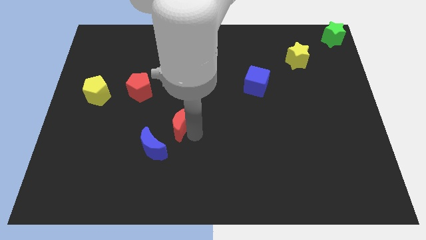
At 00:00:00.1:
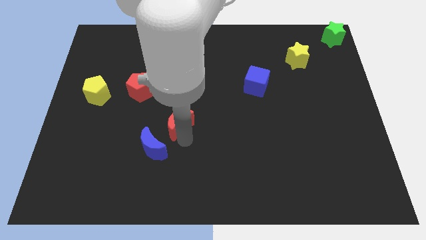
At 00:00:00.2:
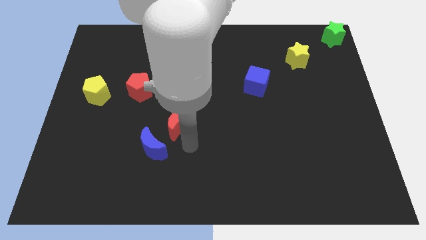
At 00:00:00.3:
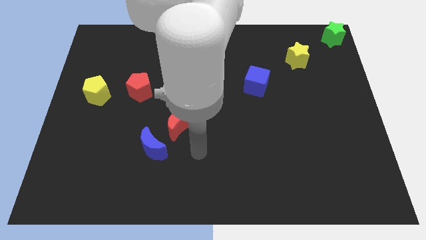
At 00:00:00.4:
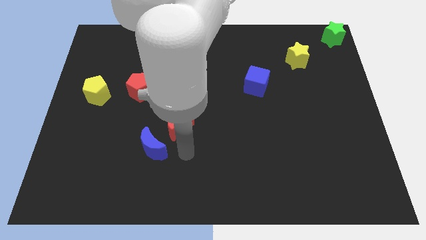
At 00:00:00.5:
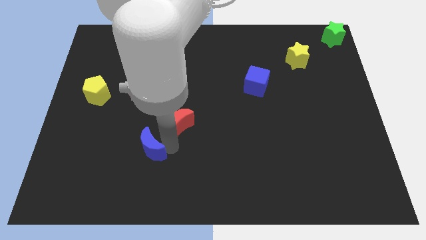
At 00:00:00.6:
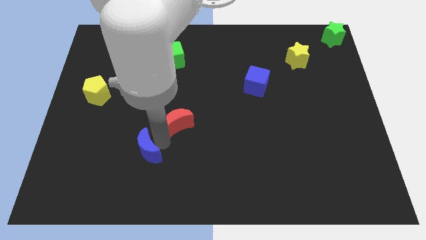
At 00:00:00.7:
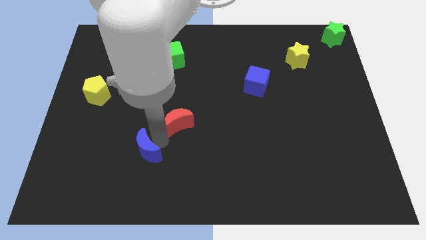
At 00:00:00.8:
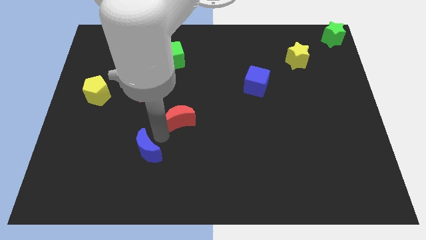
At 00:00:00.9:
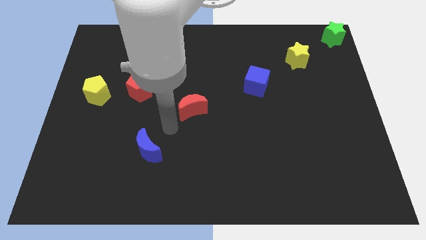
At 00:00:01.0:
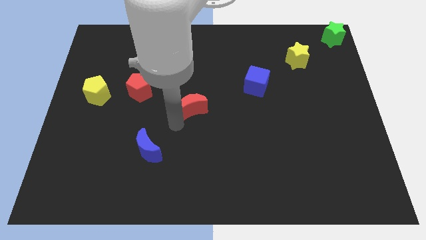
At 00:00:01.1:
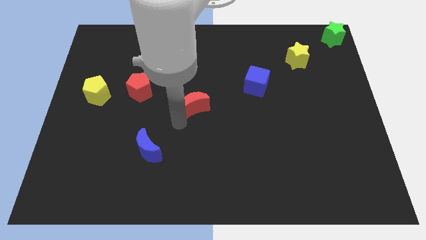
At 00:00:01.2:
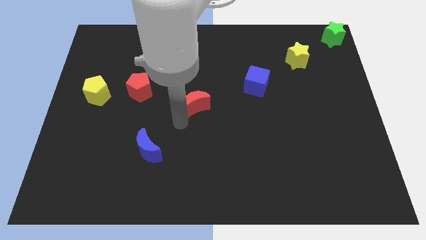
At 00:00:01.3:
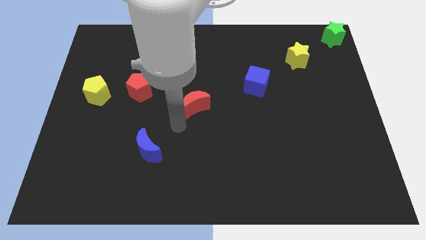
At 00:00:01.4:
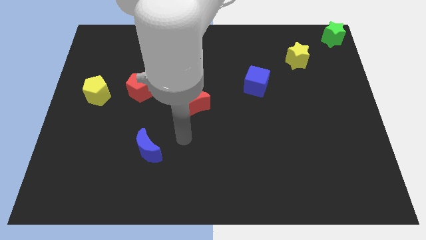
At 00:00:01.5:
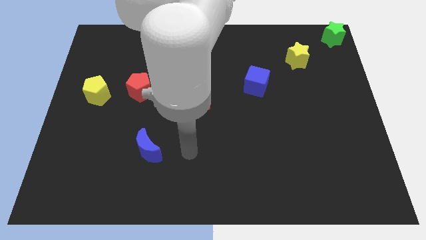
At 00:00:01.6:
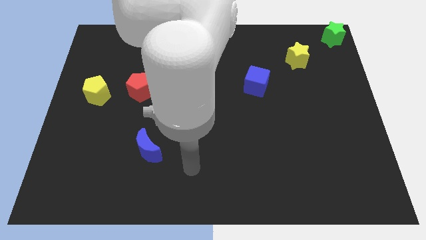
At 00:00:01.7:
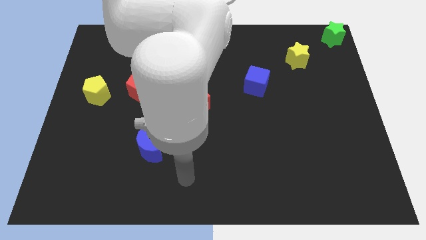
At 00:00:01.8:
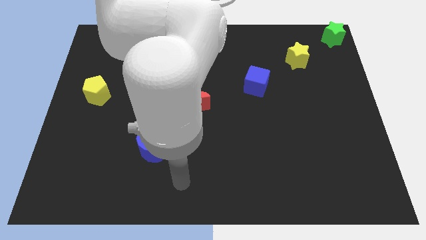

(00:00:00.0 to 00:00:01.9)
move the red crescent in between the blue moon and the blue cube

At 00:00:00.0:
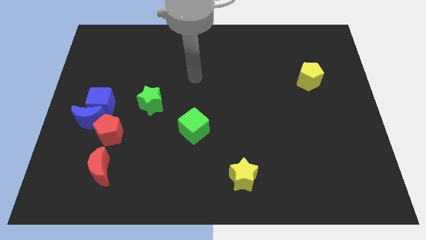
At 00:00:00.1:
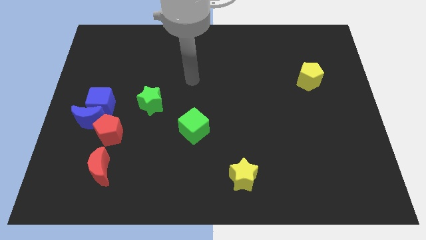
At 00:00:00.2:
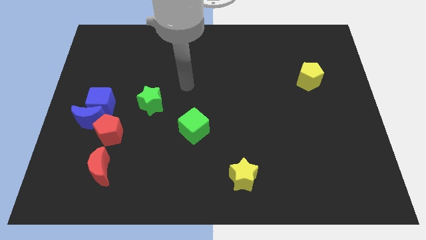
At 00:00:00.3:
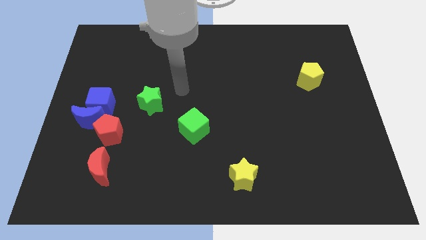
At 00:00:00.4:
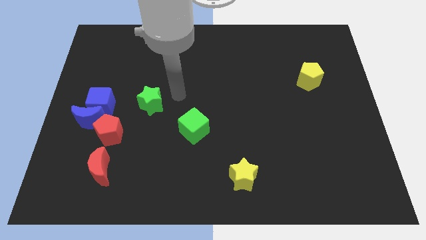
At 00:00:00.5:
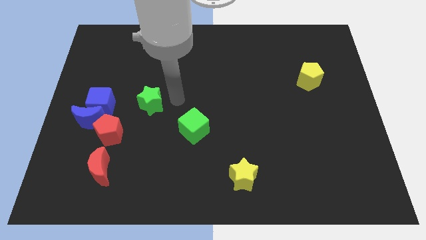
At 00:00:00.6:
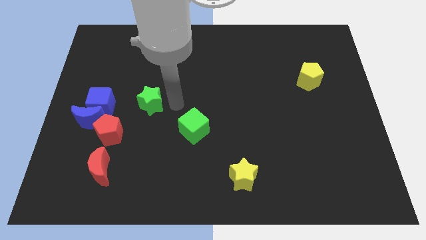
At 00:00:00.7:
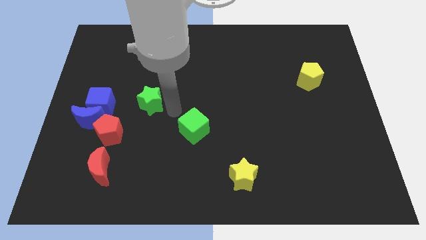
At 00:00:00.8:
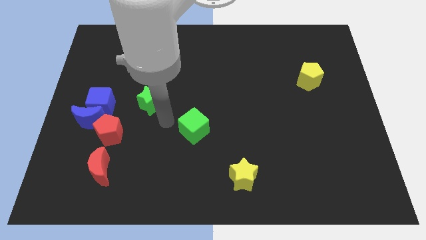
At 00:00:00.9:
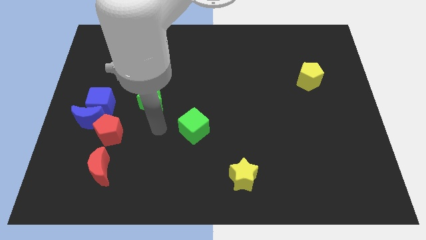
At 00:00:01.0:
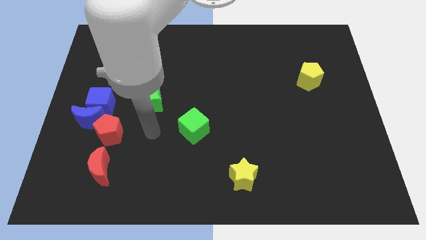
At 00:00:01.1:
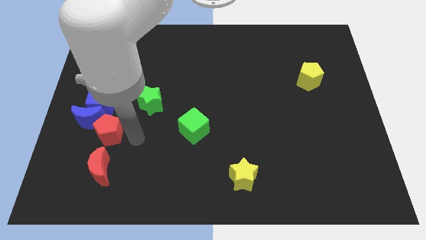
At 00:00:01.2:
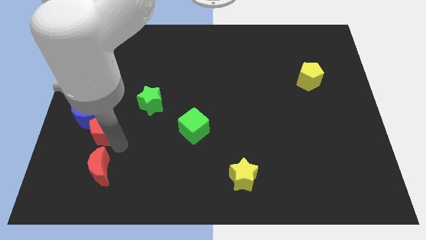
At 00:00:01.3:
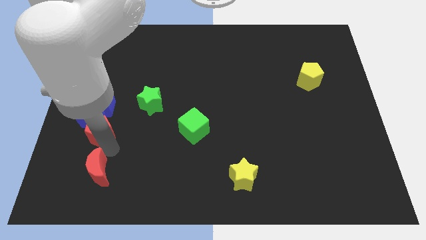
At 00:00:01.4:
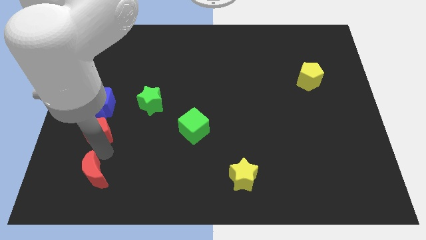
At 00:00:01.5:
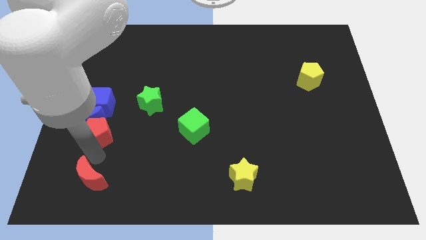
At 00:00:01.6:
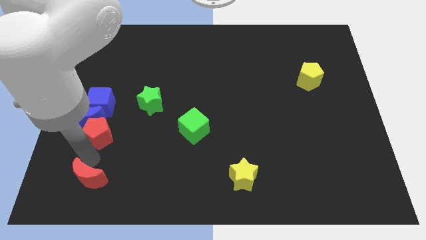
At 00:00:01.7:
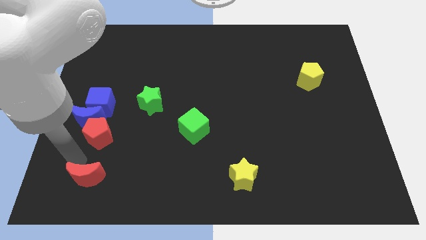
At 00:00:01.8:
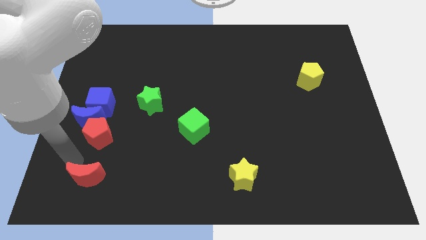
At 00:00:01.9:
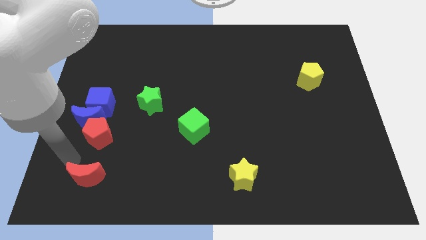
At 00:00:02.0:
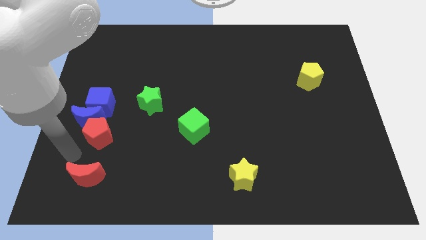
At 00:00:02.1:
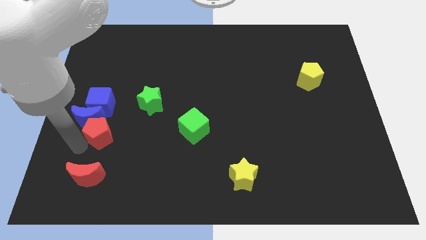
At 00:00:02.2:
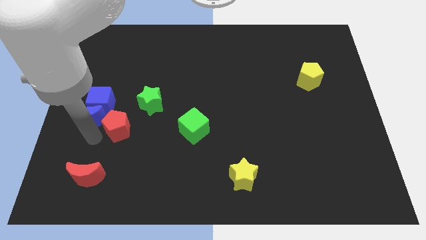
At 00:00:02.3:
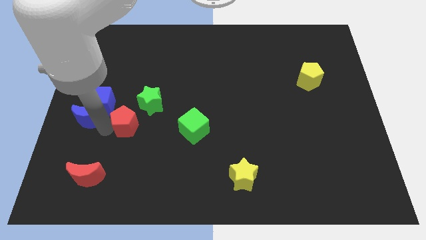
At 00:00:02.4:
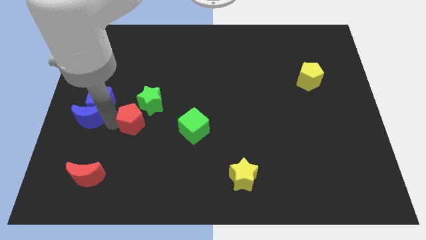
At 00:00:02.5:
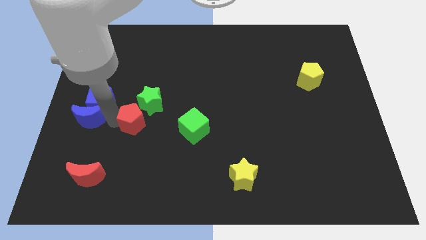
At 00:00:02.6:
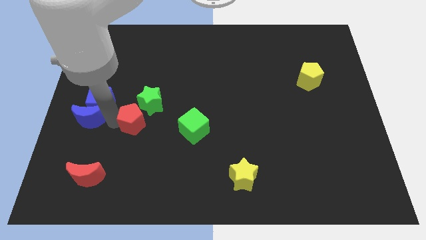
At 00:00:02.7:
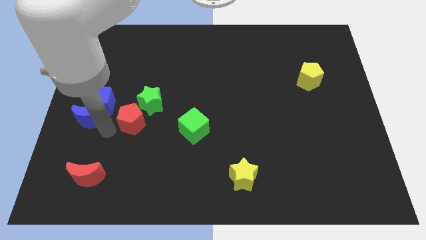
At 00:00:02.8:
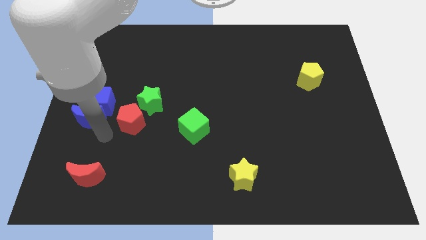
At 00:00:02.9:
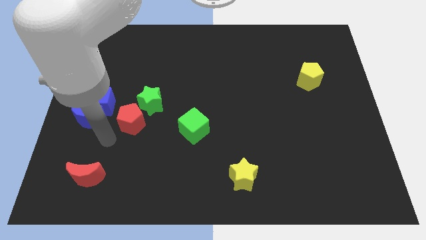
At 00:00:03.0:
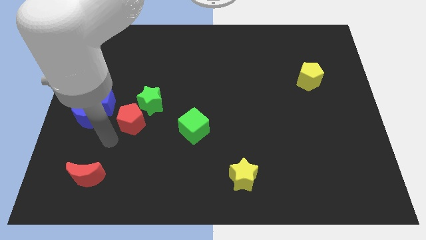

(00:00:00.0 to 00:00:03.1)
push the red pentagon close to the green star

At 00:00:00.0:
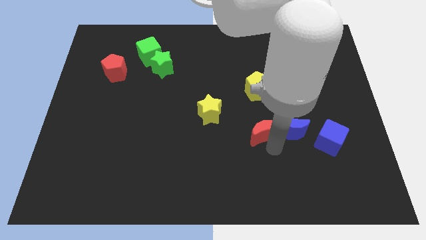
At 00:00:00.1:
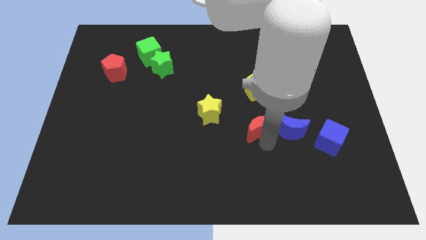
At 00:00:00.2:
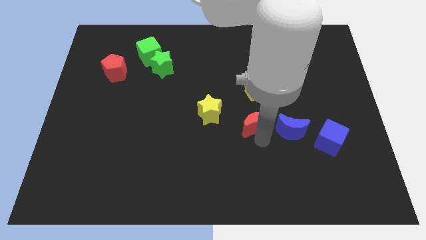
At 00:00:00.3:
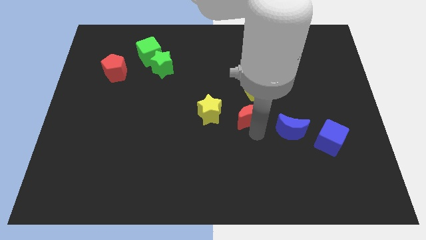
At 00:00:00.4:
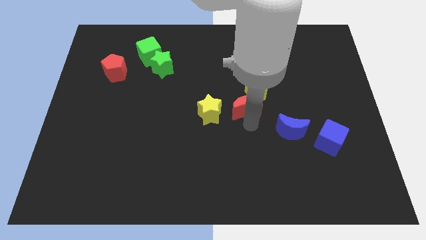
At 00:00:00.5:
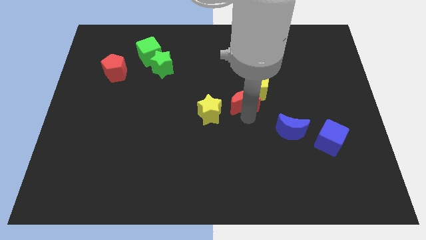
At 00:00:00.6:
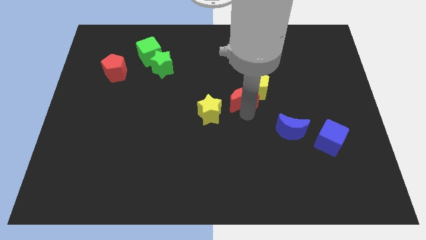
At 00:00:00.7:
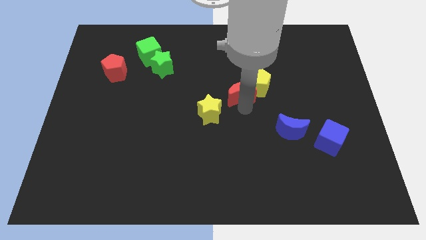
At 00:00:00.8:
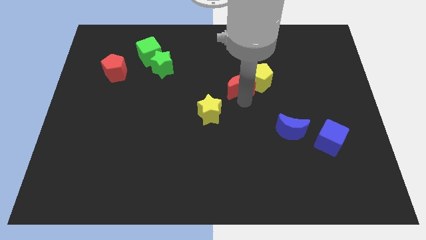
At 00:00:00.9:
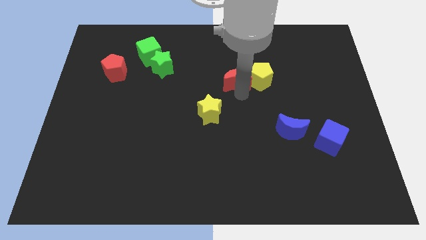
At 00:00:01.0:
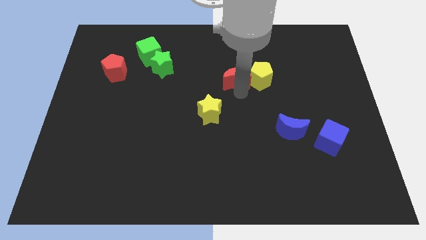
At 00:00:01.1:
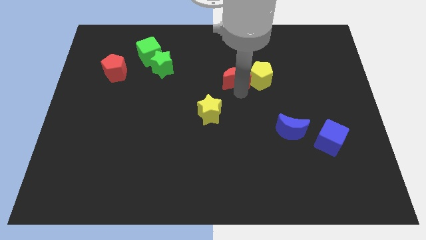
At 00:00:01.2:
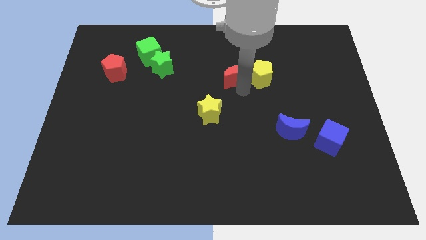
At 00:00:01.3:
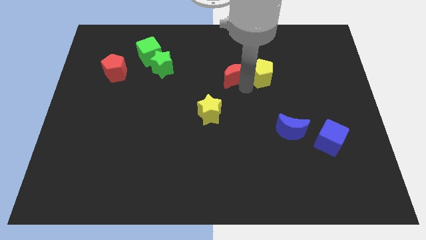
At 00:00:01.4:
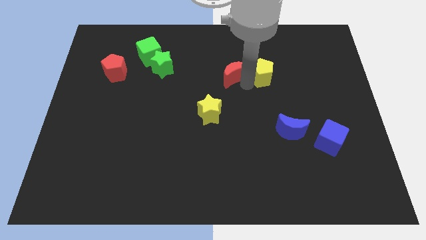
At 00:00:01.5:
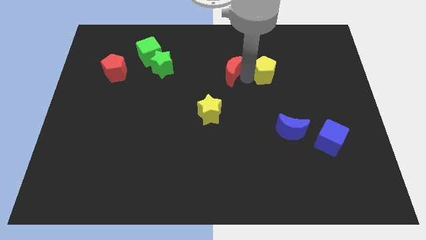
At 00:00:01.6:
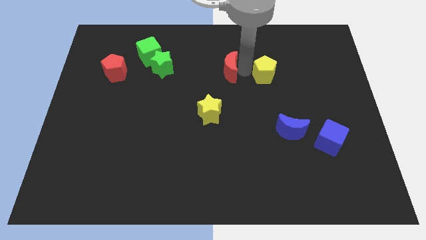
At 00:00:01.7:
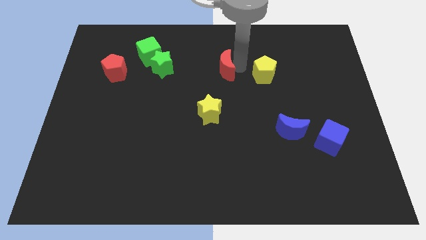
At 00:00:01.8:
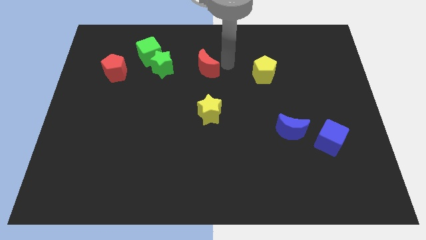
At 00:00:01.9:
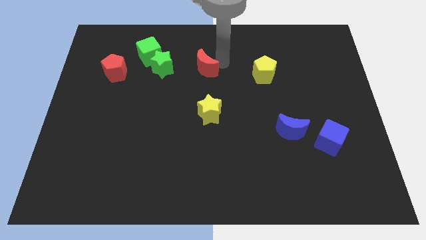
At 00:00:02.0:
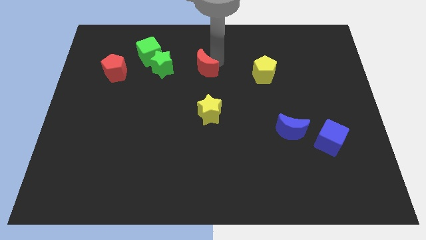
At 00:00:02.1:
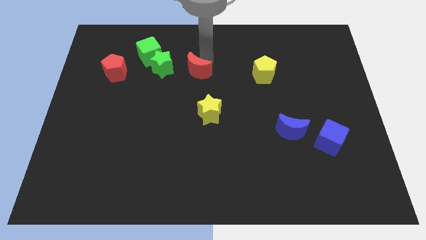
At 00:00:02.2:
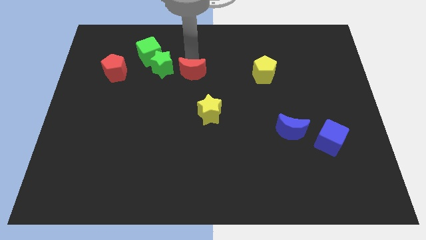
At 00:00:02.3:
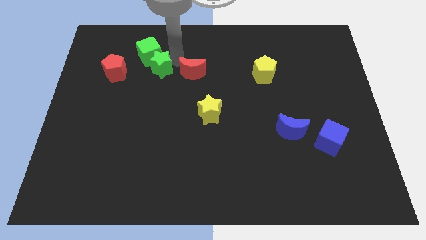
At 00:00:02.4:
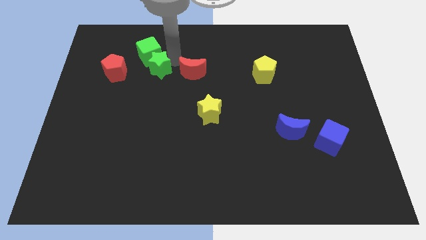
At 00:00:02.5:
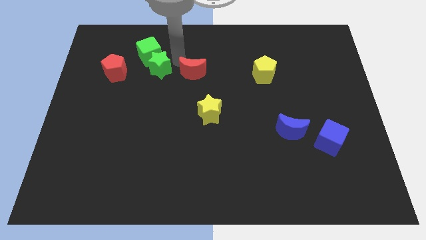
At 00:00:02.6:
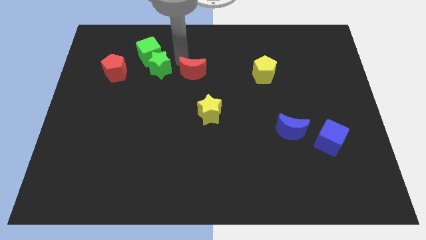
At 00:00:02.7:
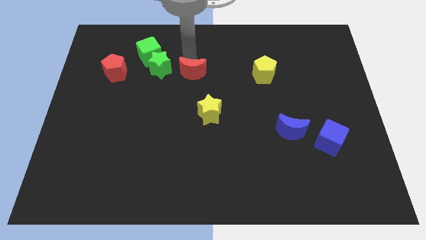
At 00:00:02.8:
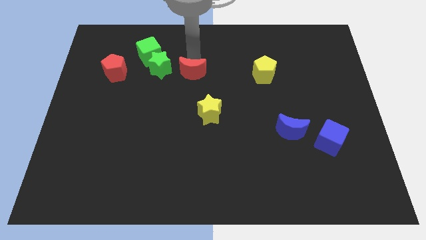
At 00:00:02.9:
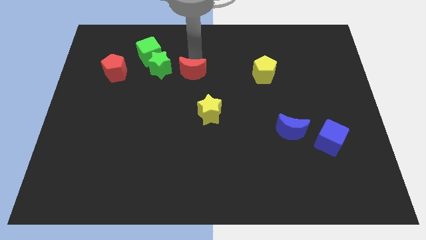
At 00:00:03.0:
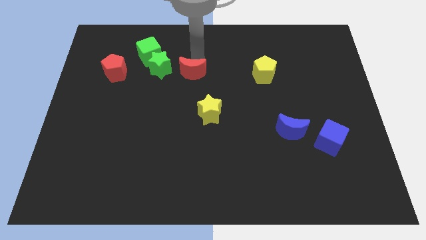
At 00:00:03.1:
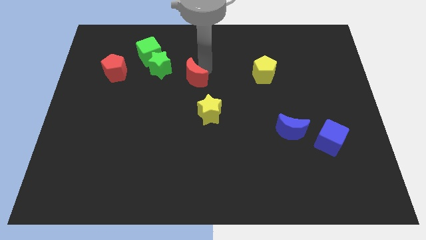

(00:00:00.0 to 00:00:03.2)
place the red crescent in between the green star and yellow pentagon

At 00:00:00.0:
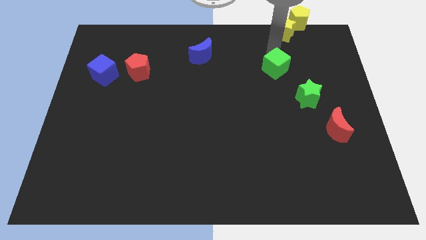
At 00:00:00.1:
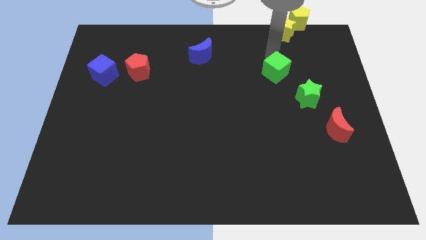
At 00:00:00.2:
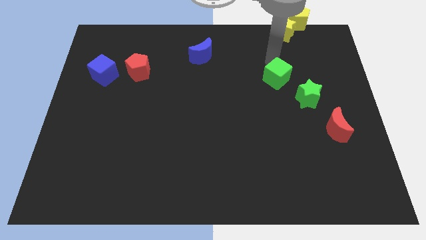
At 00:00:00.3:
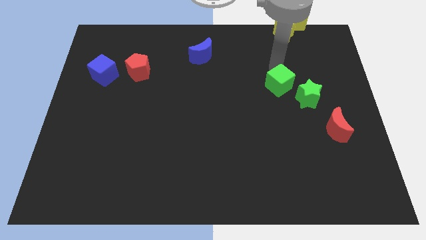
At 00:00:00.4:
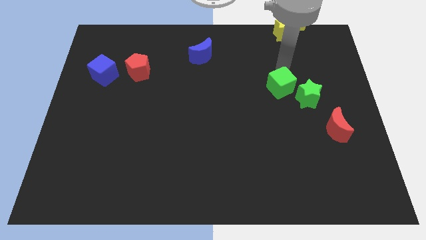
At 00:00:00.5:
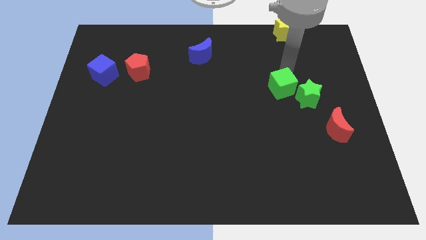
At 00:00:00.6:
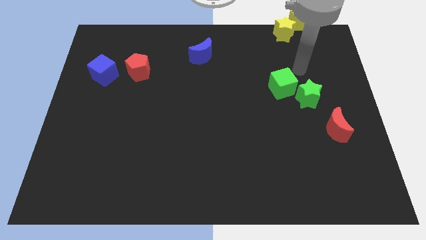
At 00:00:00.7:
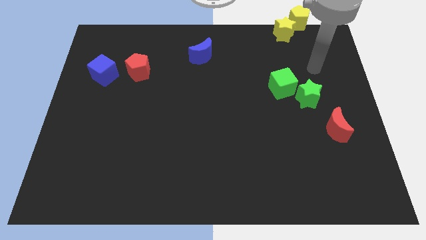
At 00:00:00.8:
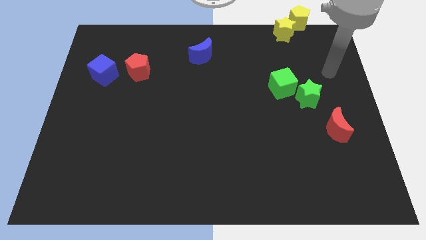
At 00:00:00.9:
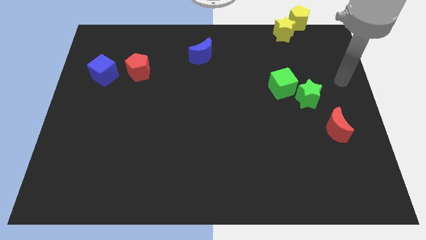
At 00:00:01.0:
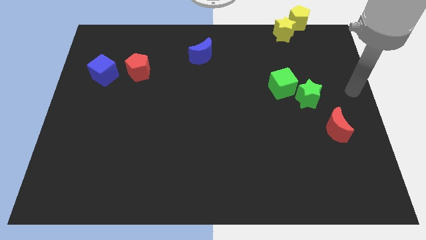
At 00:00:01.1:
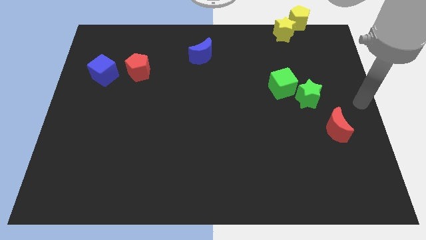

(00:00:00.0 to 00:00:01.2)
push the green cube into the green star
